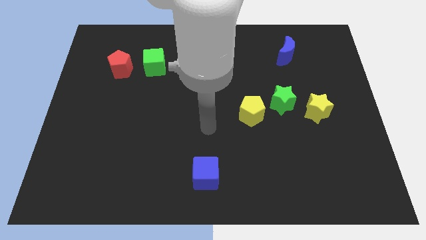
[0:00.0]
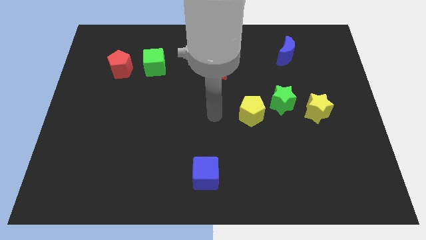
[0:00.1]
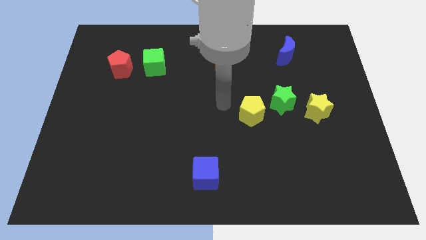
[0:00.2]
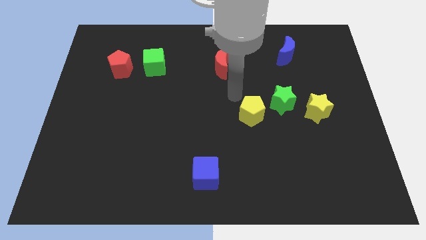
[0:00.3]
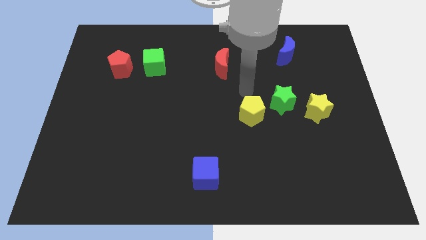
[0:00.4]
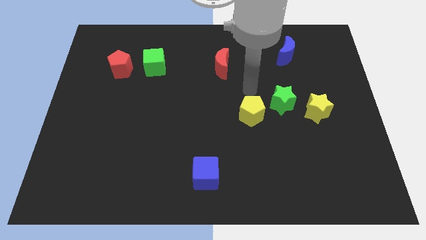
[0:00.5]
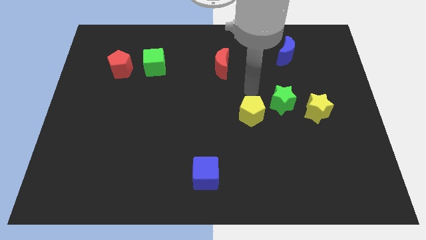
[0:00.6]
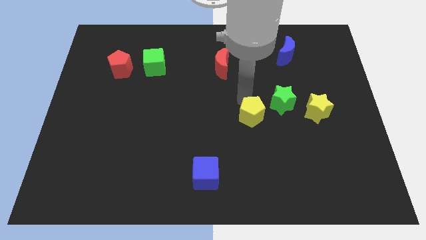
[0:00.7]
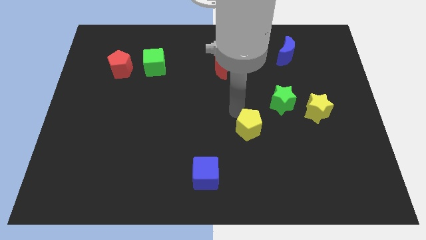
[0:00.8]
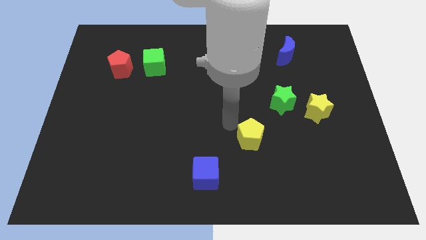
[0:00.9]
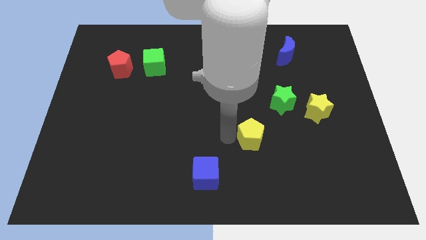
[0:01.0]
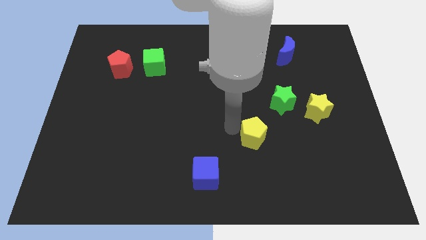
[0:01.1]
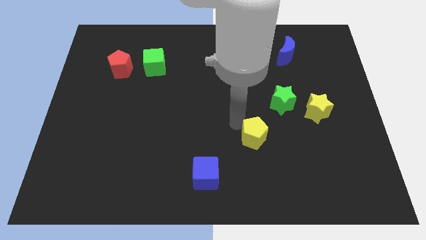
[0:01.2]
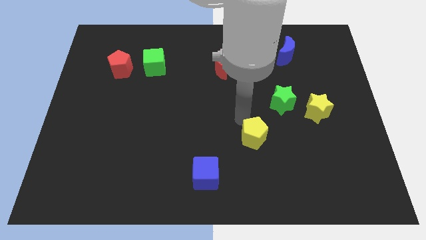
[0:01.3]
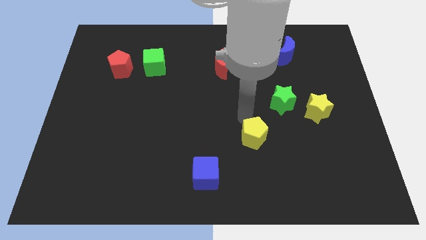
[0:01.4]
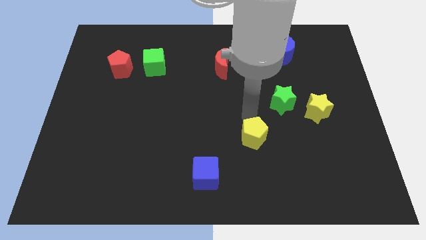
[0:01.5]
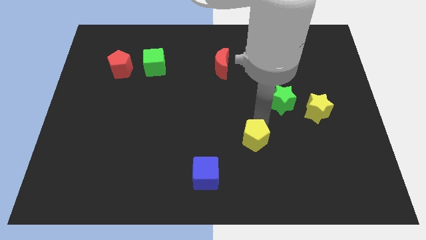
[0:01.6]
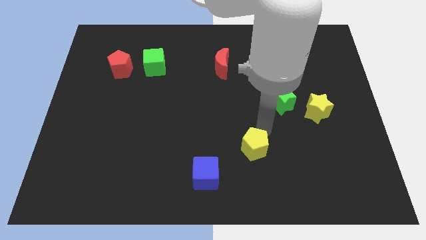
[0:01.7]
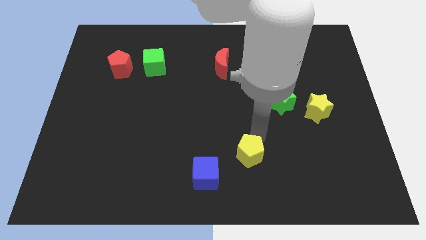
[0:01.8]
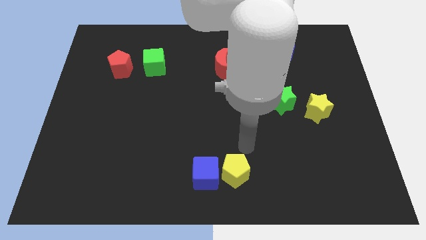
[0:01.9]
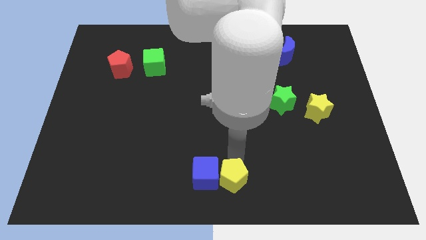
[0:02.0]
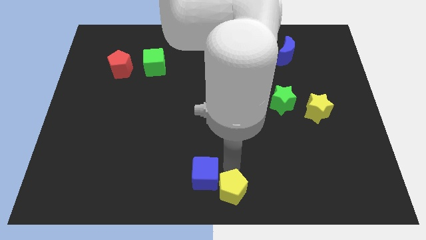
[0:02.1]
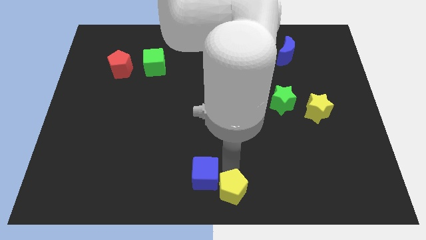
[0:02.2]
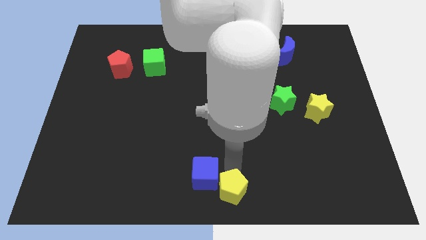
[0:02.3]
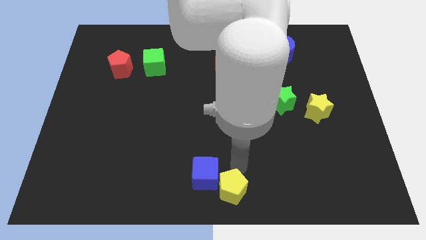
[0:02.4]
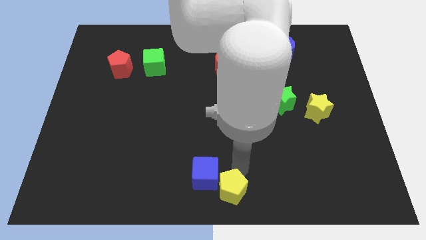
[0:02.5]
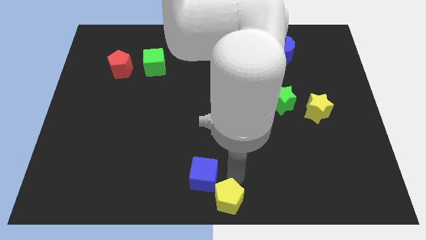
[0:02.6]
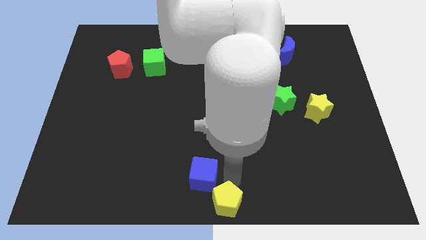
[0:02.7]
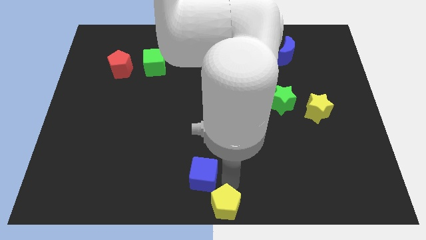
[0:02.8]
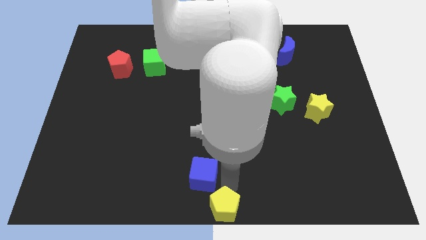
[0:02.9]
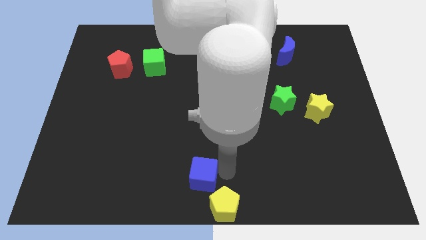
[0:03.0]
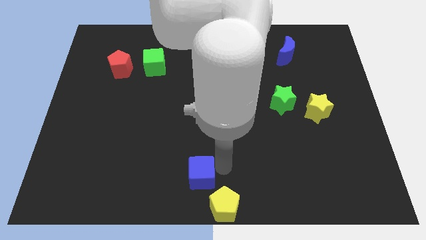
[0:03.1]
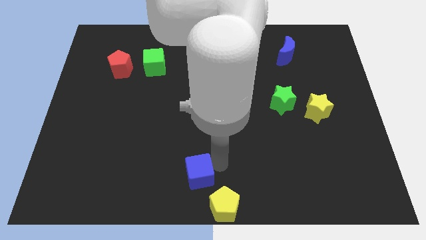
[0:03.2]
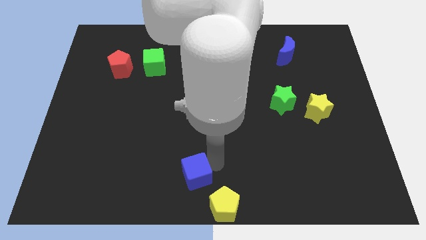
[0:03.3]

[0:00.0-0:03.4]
move the yellow pentagon to the bottom center of the board

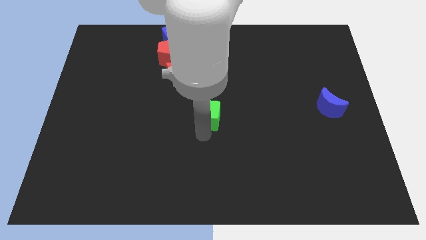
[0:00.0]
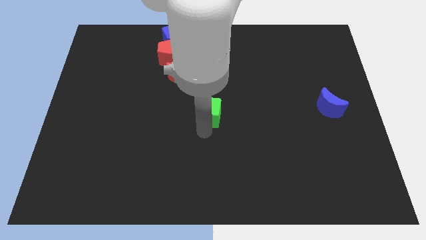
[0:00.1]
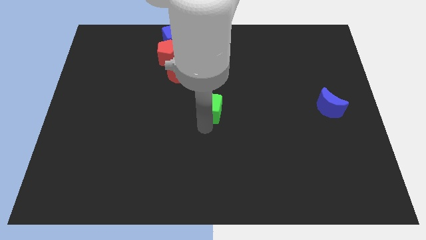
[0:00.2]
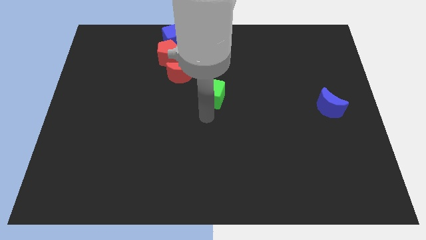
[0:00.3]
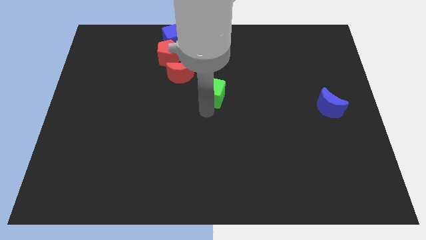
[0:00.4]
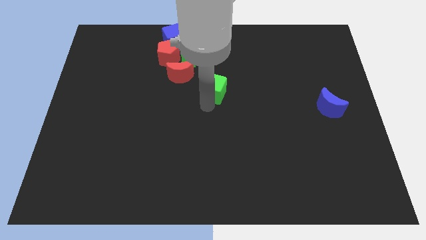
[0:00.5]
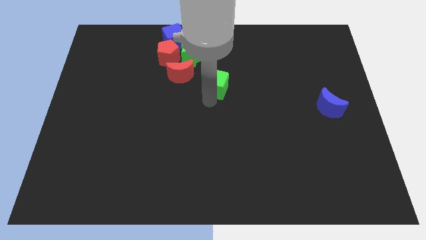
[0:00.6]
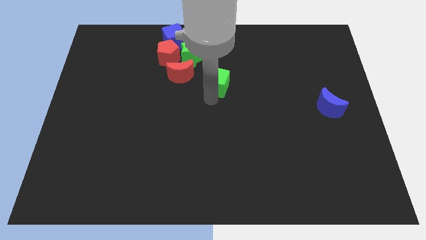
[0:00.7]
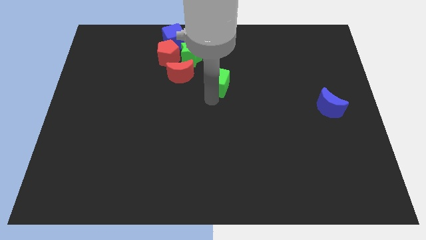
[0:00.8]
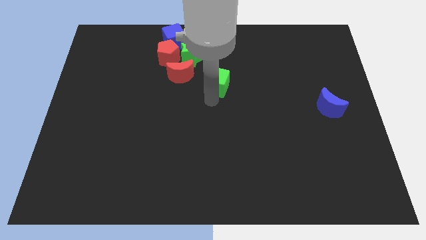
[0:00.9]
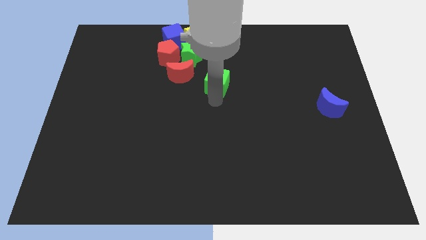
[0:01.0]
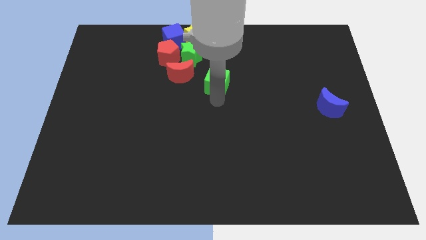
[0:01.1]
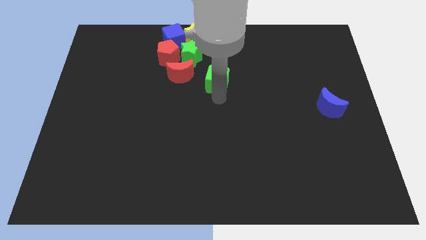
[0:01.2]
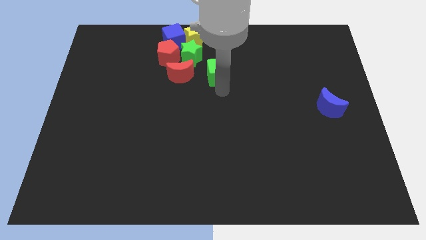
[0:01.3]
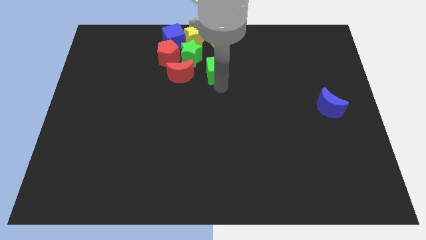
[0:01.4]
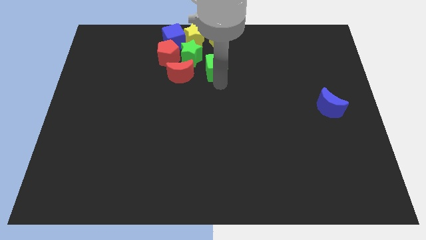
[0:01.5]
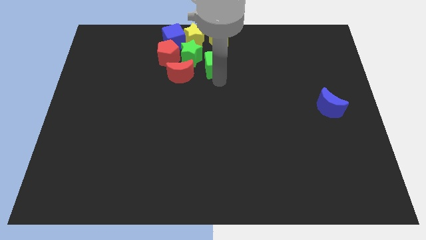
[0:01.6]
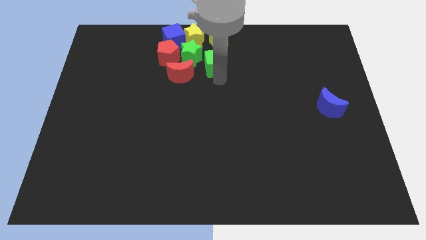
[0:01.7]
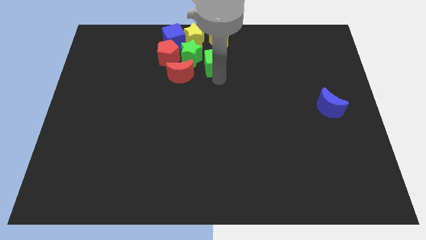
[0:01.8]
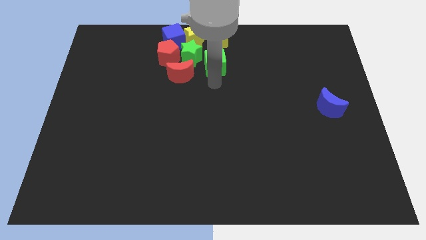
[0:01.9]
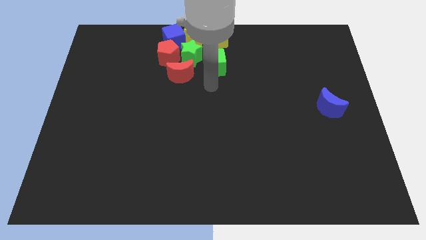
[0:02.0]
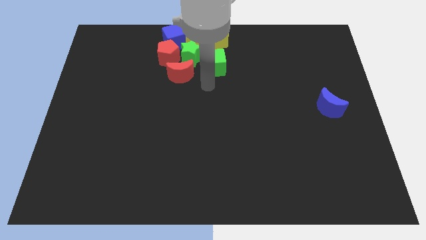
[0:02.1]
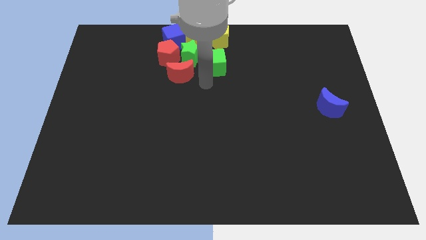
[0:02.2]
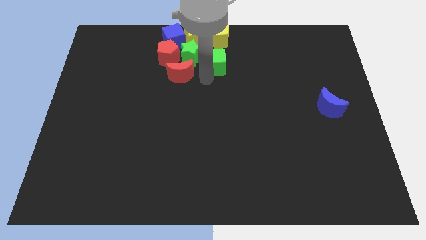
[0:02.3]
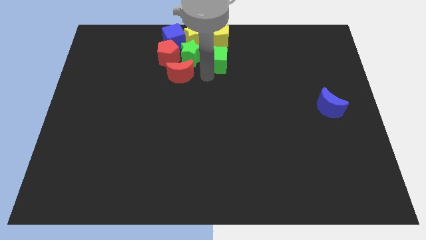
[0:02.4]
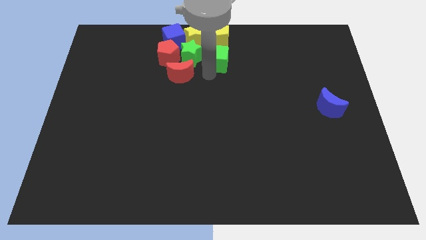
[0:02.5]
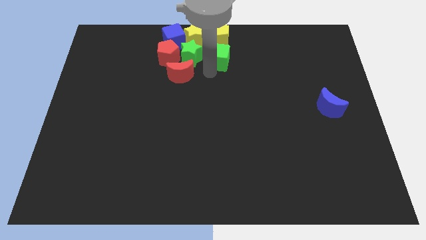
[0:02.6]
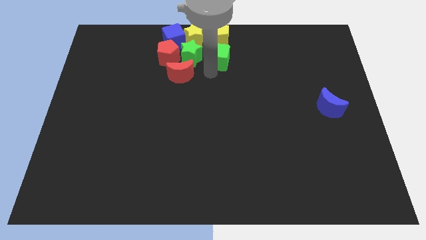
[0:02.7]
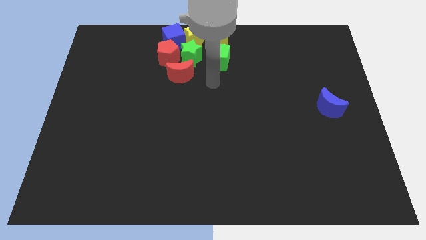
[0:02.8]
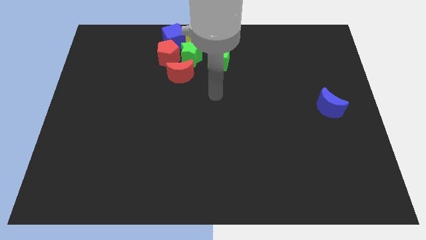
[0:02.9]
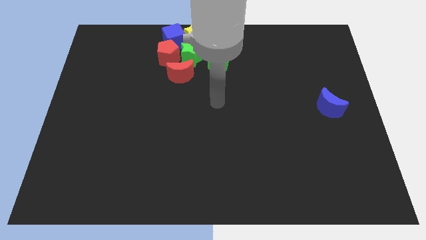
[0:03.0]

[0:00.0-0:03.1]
move the green cube down to the yellow pentagon

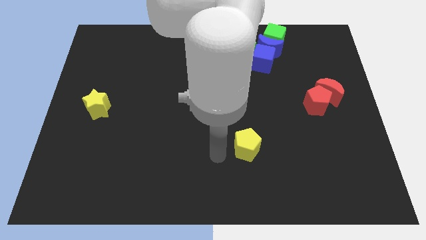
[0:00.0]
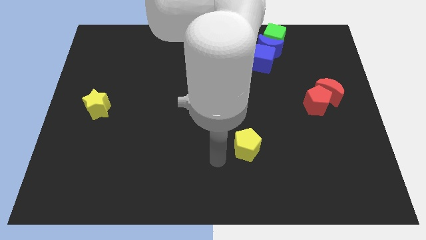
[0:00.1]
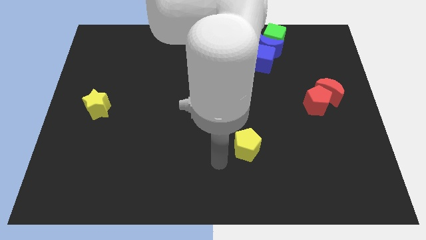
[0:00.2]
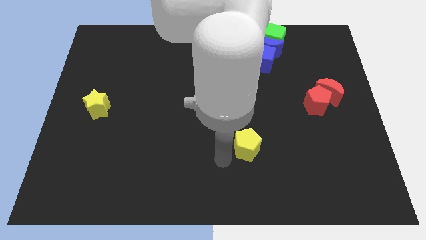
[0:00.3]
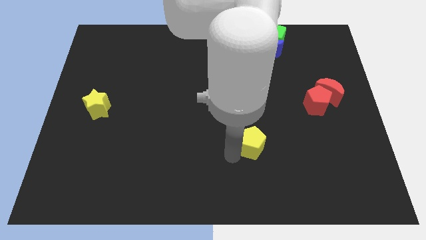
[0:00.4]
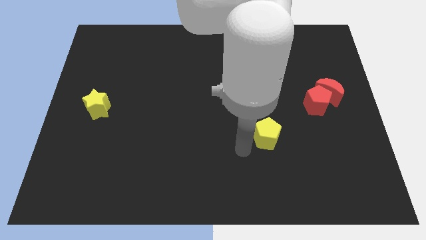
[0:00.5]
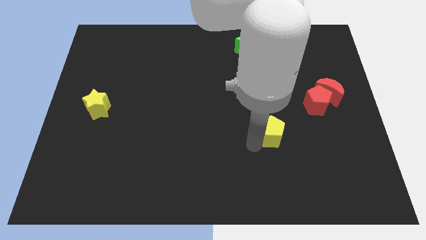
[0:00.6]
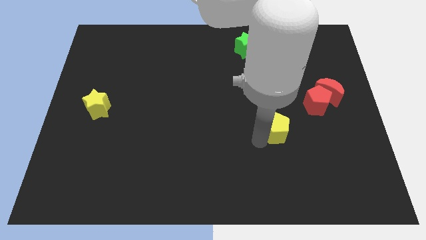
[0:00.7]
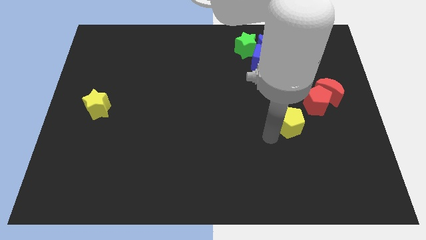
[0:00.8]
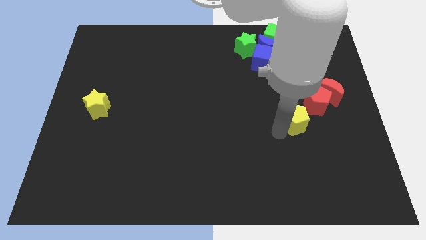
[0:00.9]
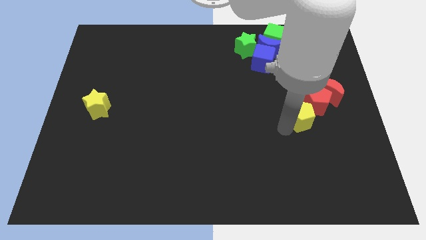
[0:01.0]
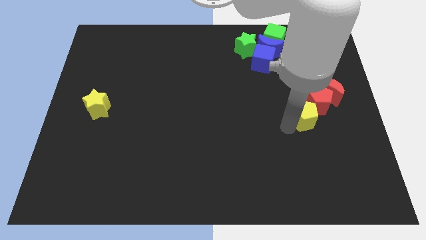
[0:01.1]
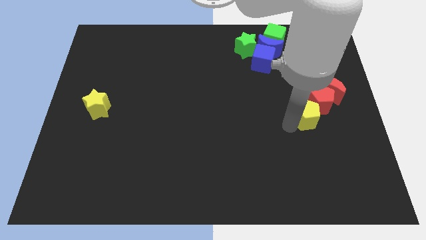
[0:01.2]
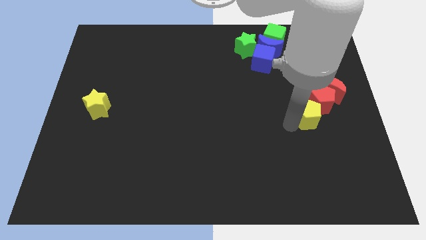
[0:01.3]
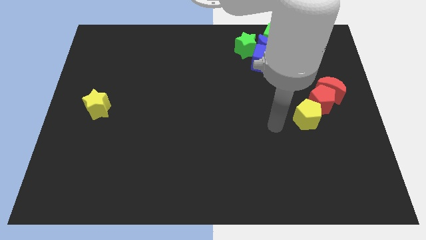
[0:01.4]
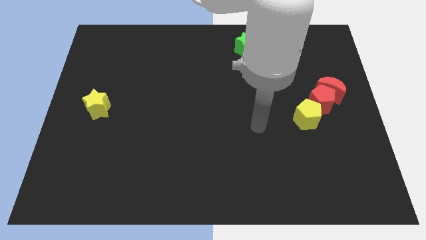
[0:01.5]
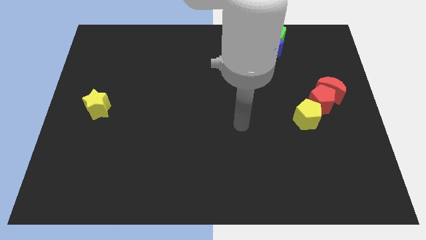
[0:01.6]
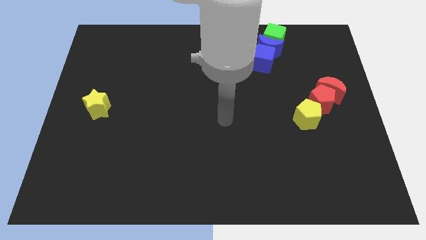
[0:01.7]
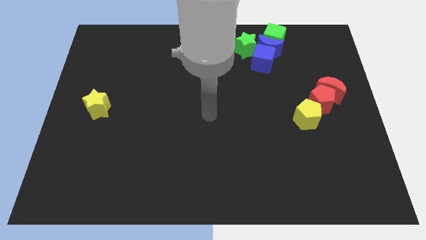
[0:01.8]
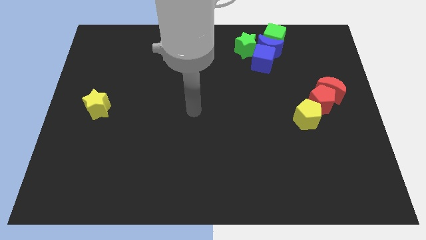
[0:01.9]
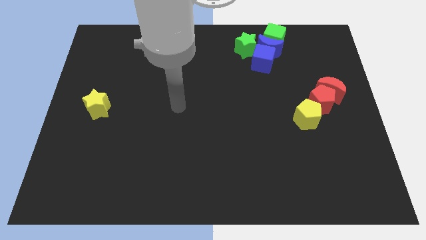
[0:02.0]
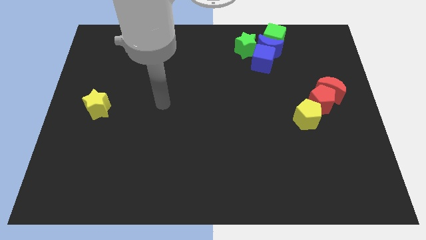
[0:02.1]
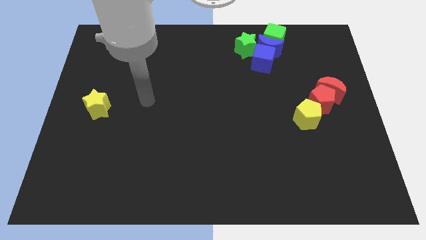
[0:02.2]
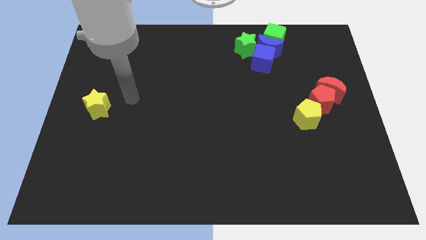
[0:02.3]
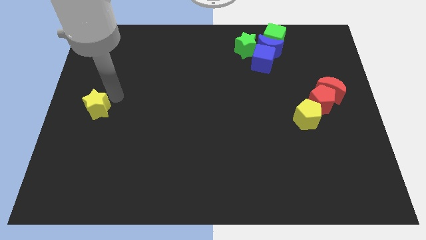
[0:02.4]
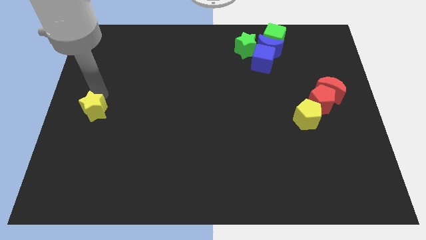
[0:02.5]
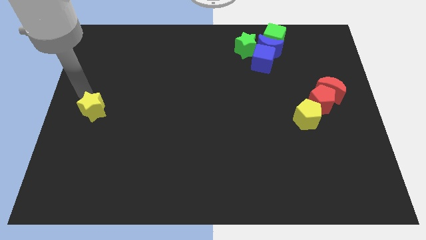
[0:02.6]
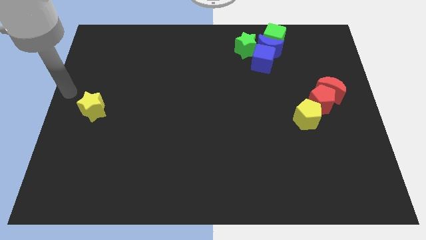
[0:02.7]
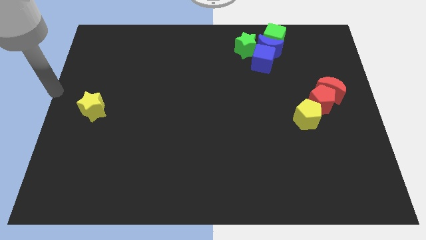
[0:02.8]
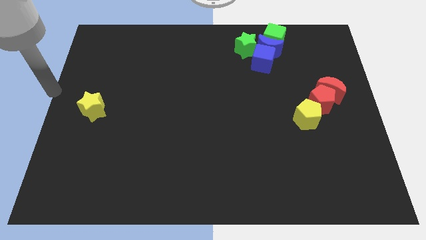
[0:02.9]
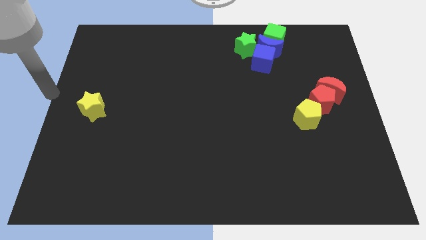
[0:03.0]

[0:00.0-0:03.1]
move yellow pentagon to the left of red pentagon
